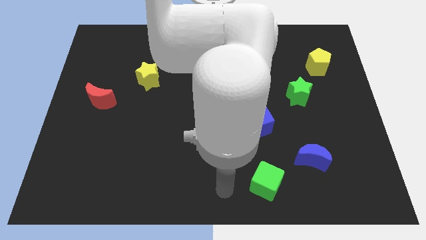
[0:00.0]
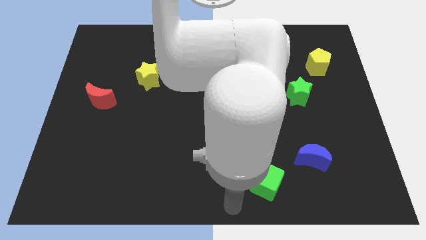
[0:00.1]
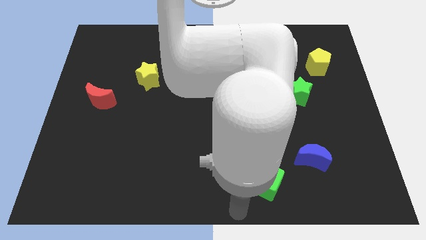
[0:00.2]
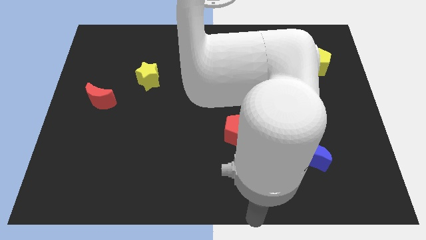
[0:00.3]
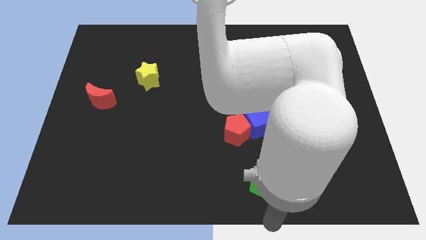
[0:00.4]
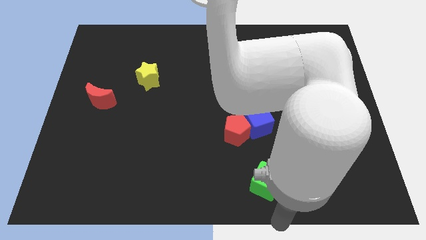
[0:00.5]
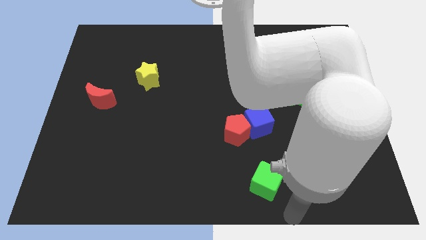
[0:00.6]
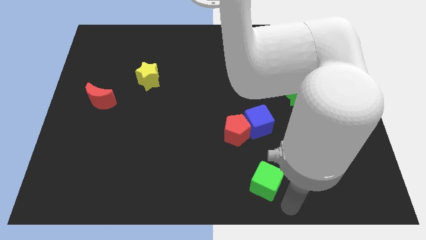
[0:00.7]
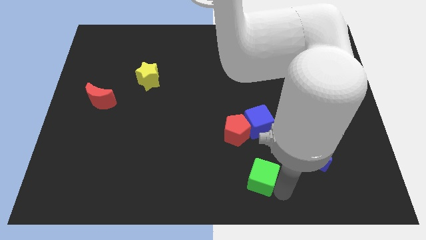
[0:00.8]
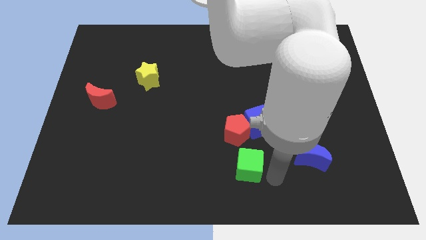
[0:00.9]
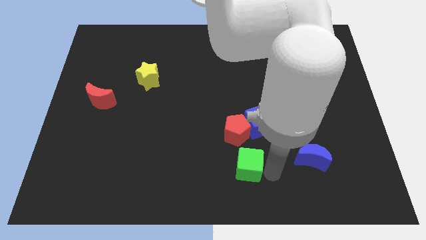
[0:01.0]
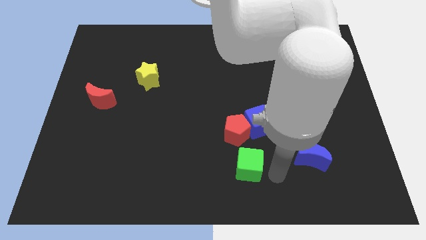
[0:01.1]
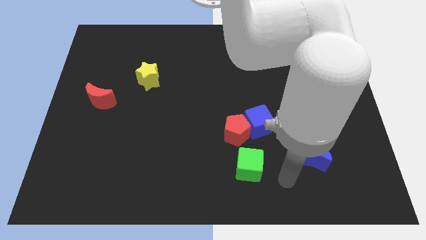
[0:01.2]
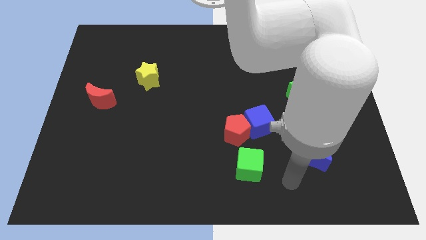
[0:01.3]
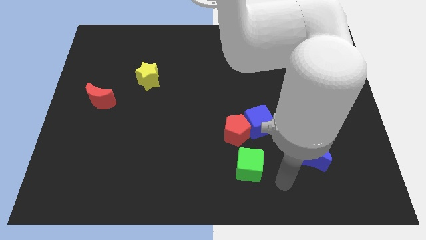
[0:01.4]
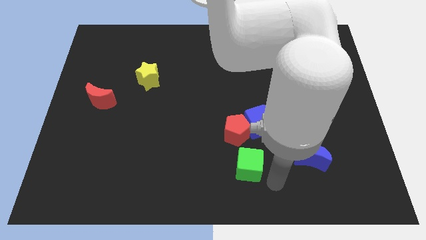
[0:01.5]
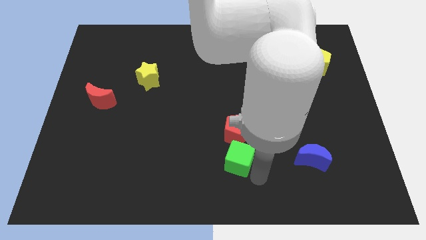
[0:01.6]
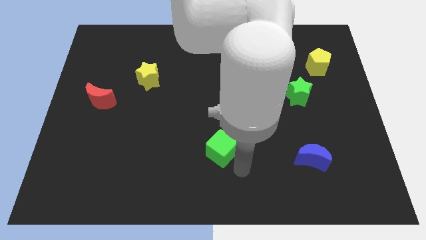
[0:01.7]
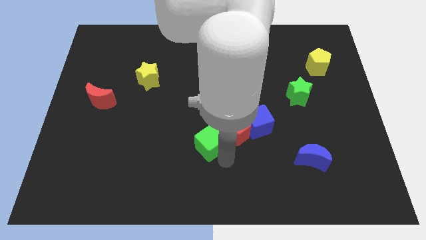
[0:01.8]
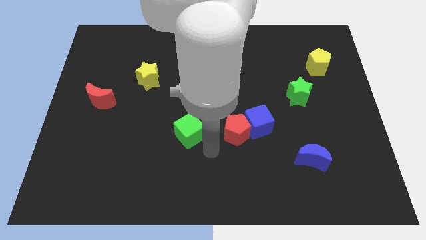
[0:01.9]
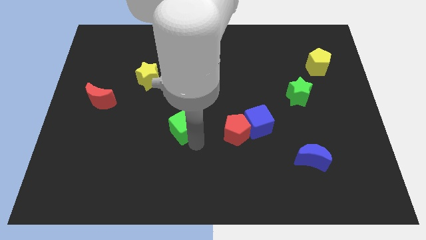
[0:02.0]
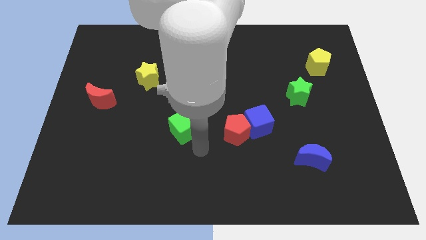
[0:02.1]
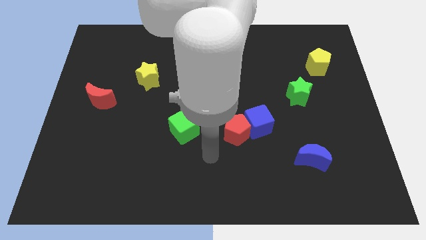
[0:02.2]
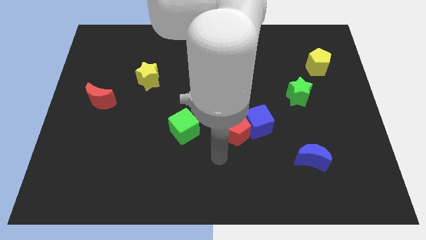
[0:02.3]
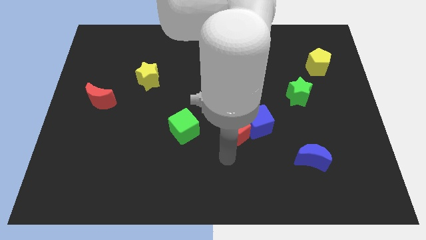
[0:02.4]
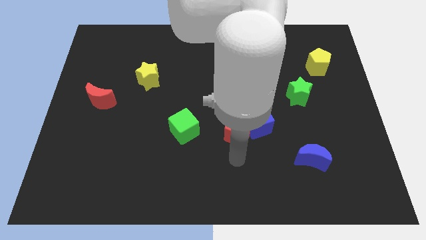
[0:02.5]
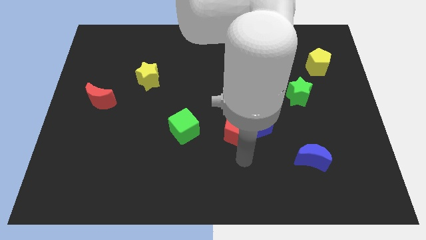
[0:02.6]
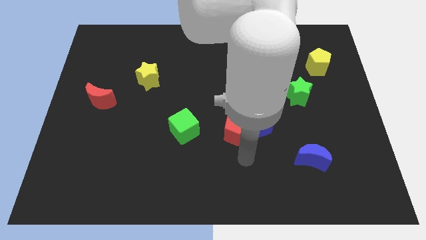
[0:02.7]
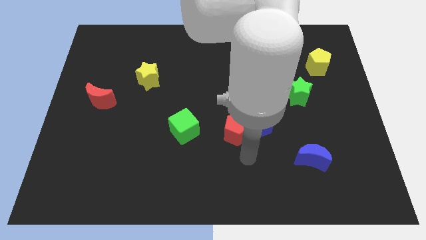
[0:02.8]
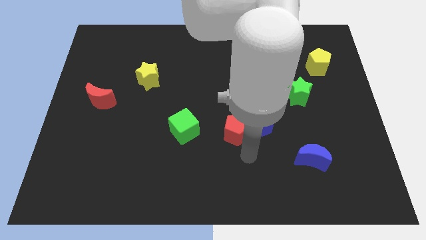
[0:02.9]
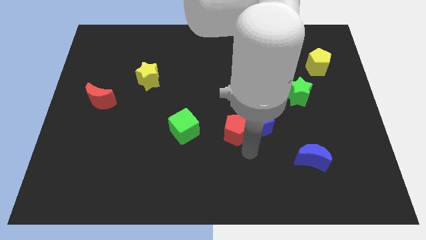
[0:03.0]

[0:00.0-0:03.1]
put the green cube to the left of the red pentagon

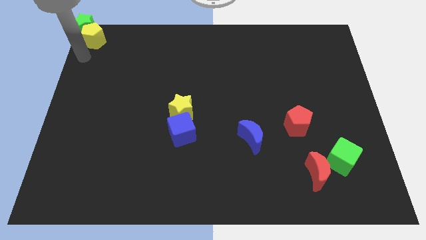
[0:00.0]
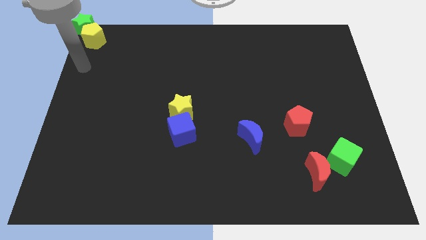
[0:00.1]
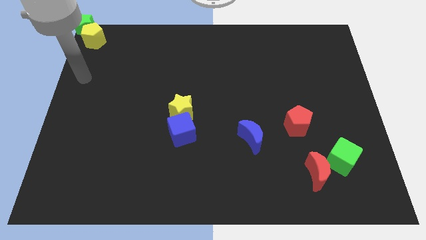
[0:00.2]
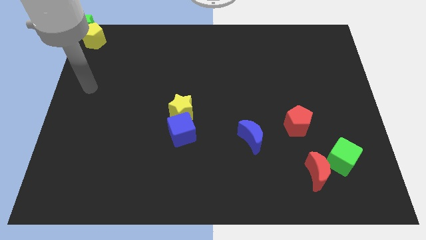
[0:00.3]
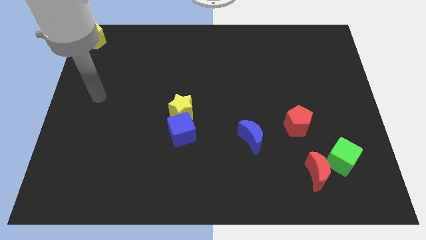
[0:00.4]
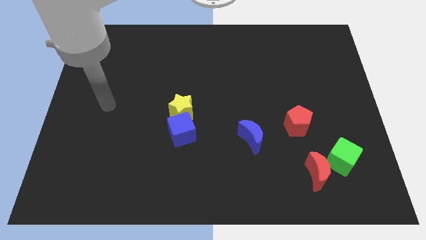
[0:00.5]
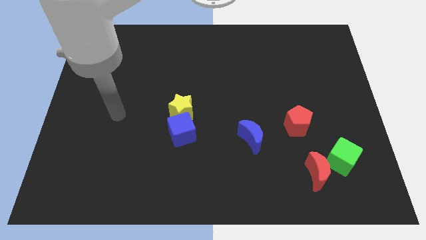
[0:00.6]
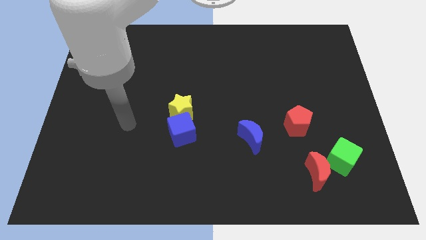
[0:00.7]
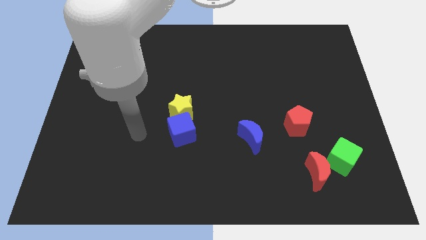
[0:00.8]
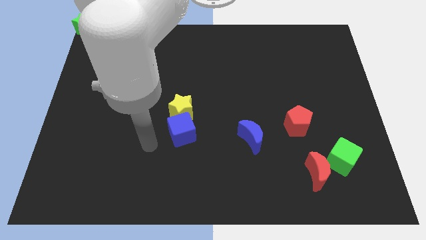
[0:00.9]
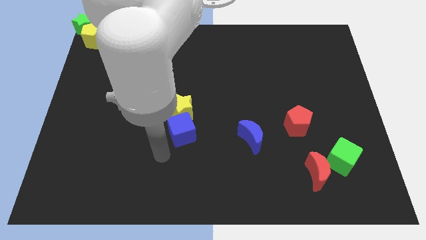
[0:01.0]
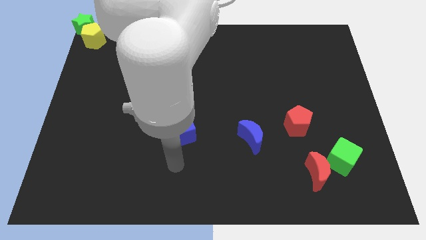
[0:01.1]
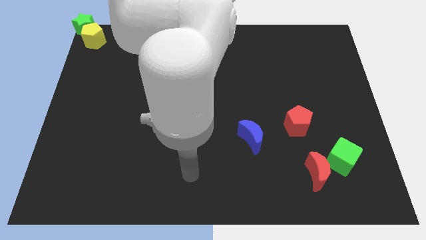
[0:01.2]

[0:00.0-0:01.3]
point your arm at the bottom side of the blue cube

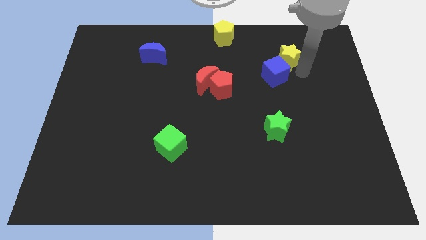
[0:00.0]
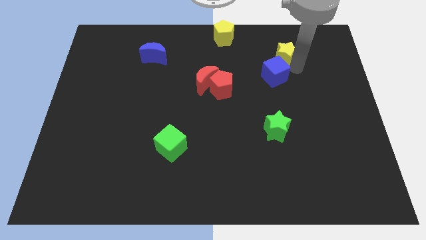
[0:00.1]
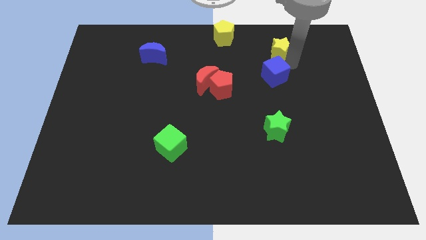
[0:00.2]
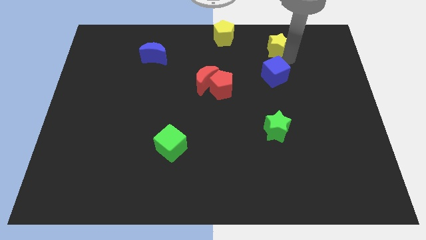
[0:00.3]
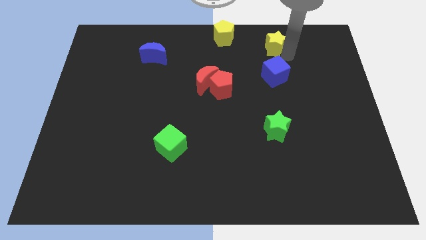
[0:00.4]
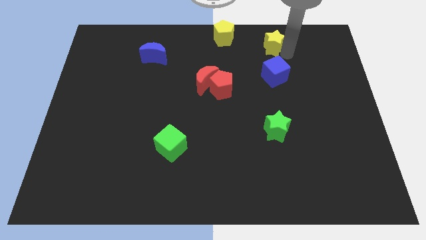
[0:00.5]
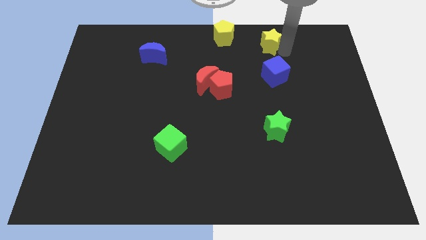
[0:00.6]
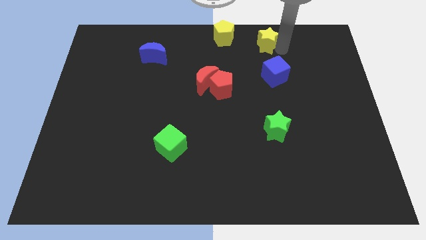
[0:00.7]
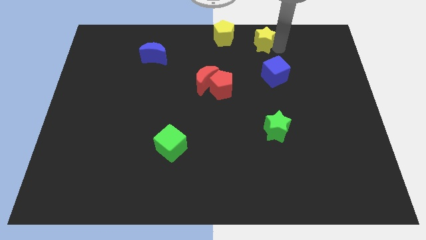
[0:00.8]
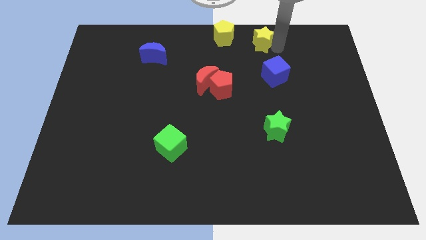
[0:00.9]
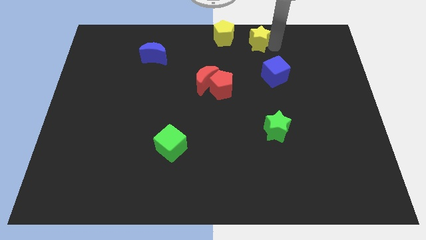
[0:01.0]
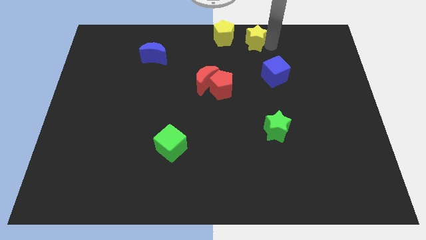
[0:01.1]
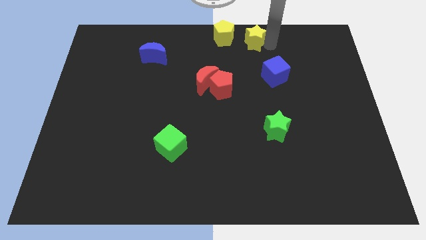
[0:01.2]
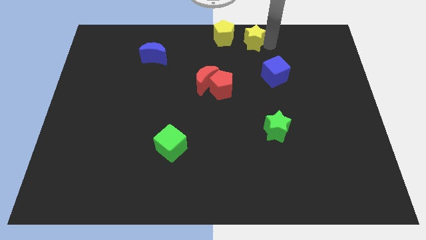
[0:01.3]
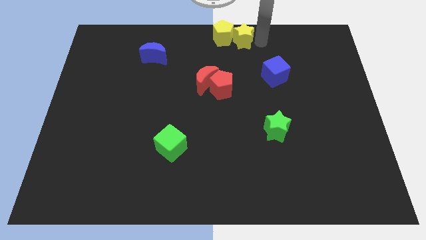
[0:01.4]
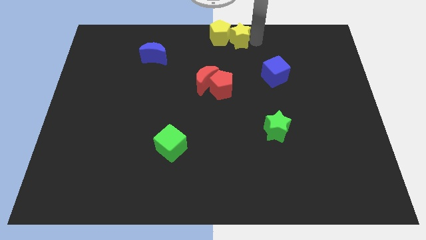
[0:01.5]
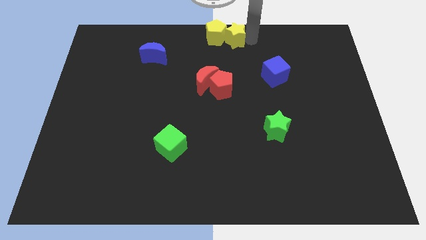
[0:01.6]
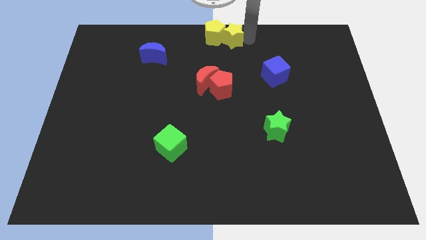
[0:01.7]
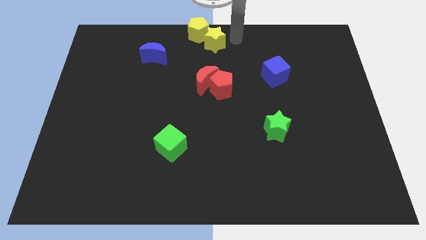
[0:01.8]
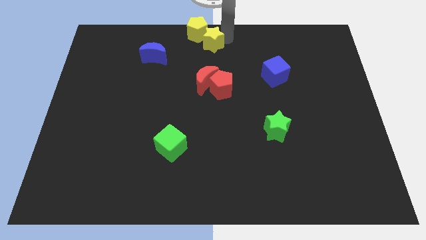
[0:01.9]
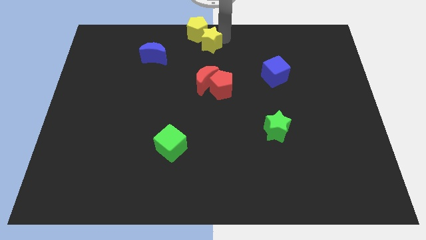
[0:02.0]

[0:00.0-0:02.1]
slide the yellow star into the yellow pentagon

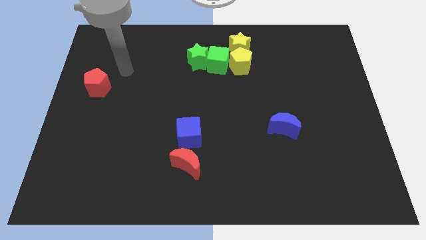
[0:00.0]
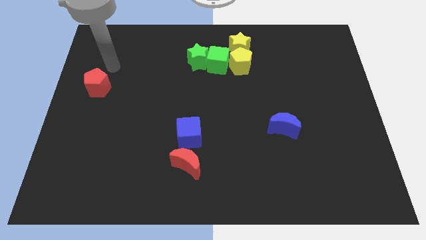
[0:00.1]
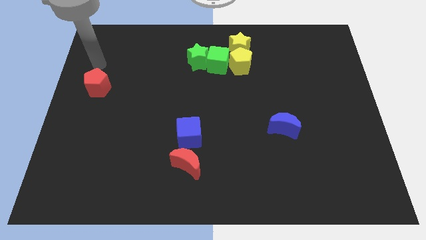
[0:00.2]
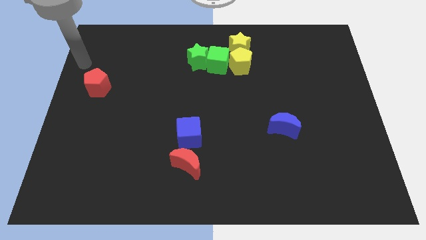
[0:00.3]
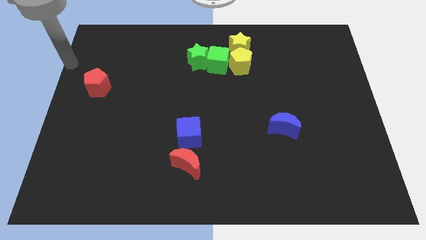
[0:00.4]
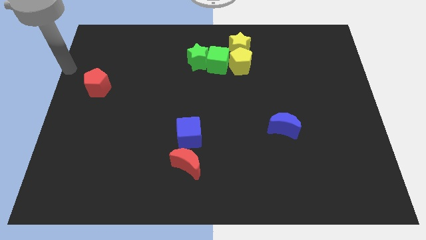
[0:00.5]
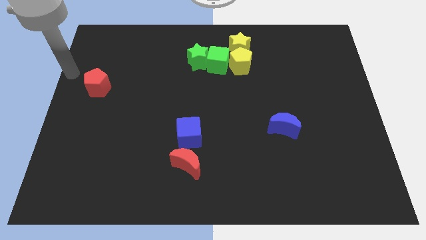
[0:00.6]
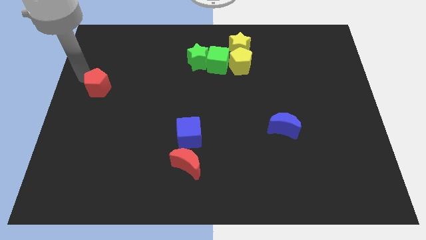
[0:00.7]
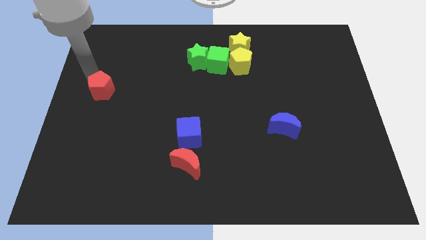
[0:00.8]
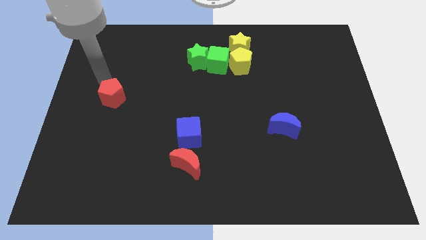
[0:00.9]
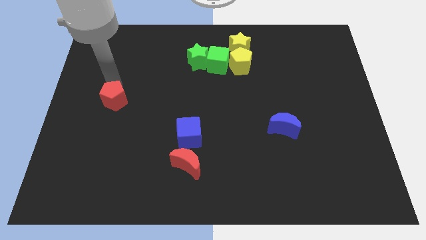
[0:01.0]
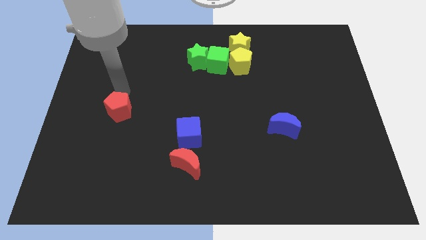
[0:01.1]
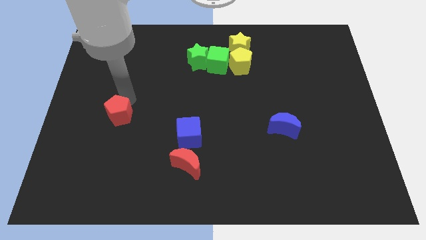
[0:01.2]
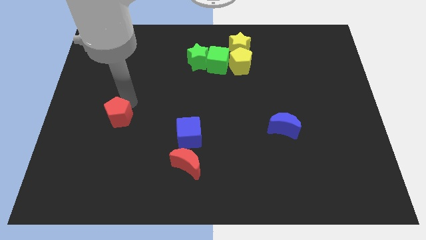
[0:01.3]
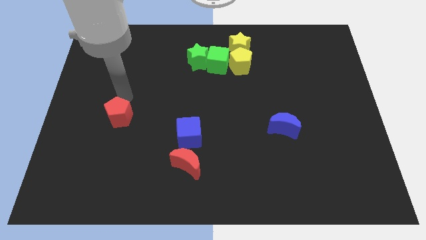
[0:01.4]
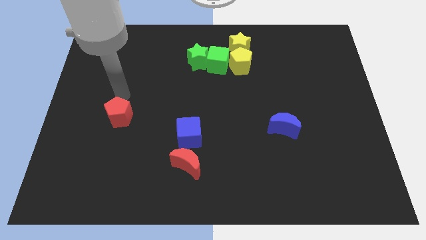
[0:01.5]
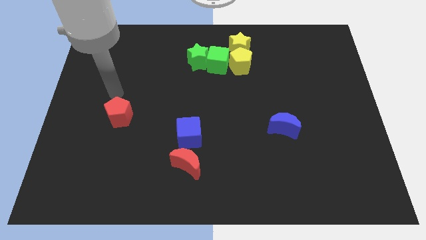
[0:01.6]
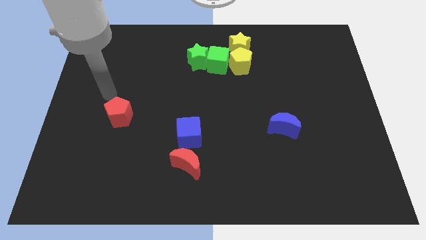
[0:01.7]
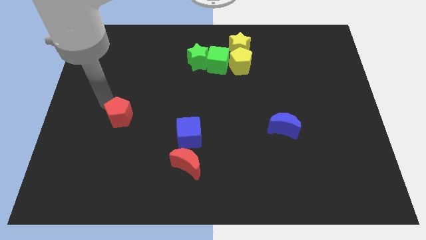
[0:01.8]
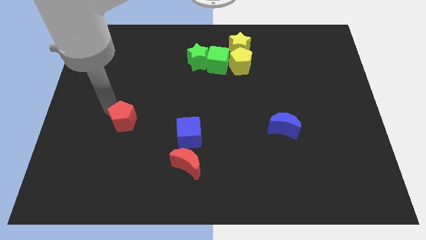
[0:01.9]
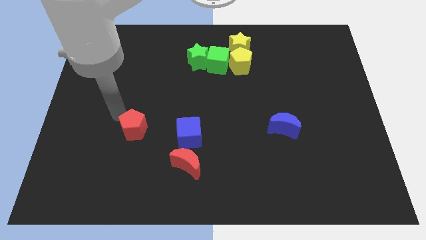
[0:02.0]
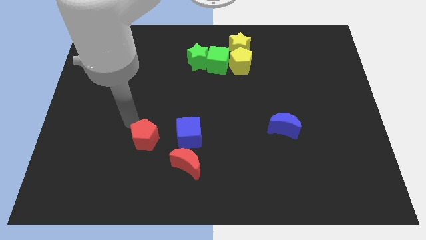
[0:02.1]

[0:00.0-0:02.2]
move the red pentagon to the left of blue cube

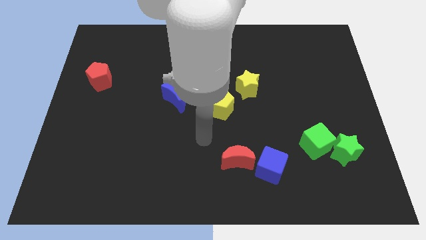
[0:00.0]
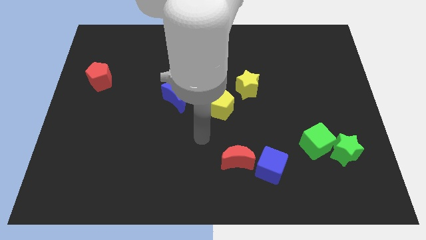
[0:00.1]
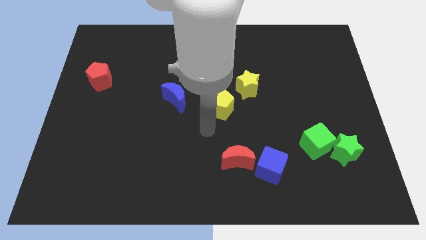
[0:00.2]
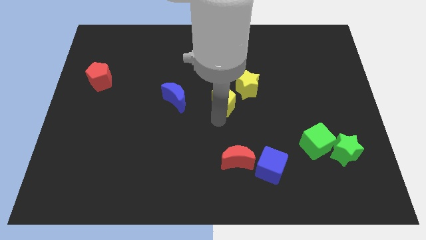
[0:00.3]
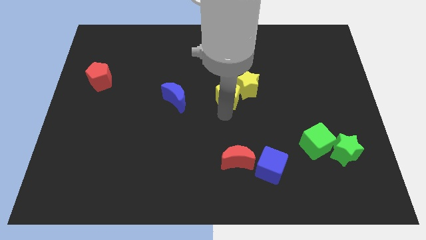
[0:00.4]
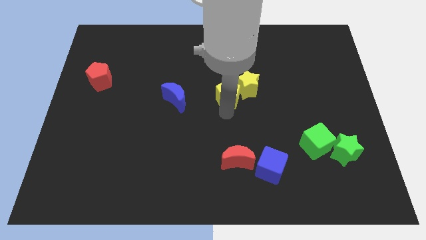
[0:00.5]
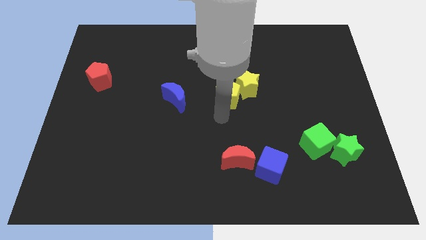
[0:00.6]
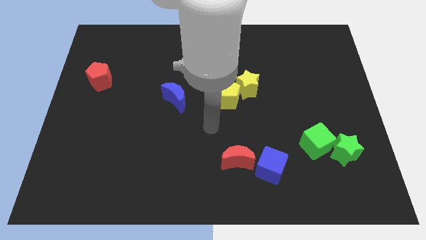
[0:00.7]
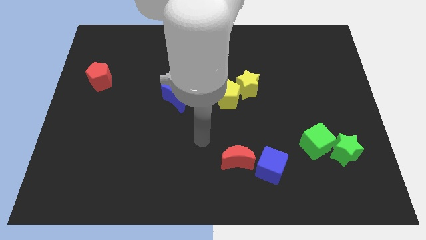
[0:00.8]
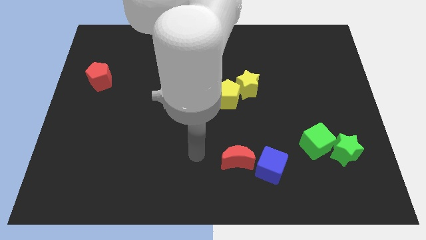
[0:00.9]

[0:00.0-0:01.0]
push the yellow pentagon into the yellow star diagonally from bottom
